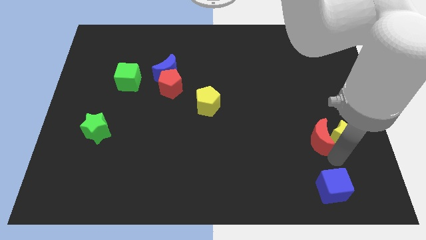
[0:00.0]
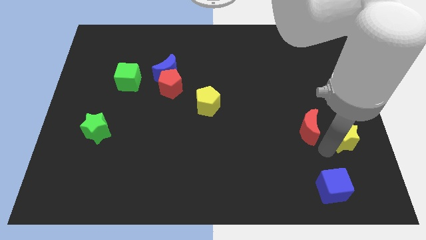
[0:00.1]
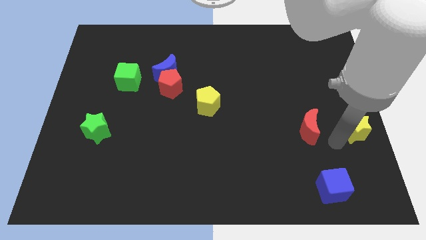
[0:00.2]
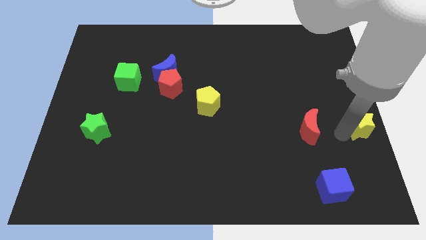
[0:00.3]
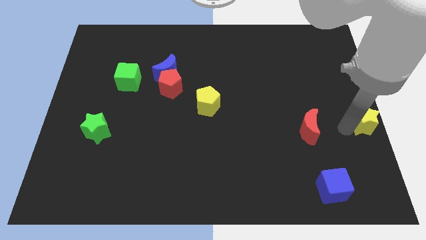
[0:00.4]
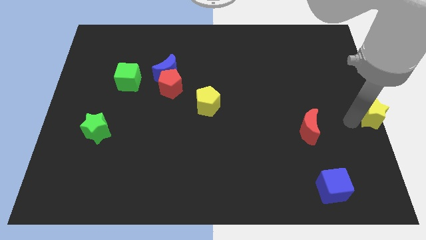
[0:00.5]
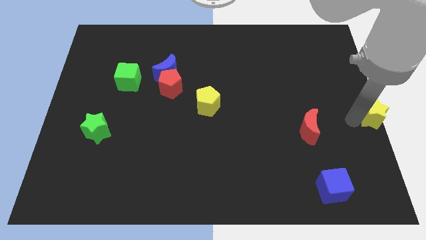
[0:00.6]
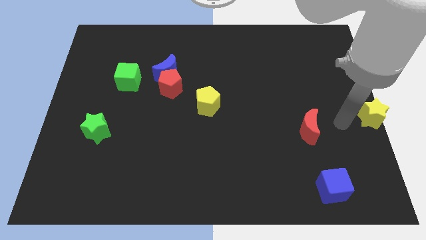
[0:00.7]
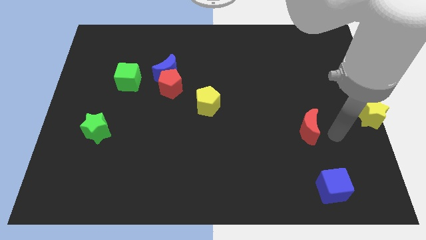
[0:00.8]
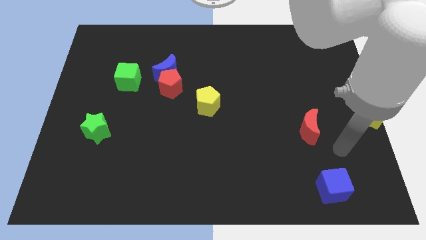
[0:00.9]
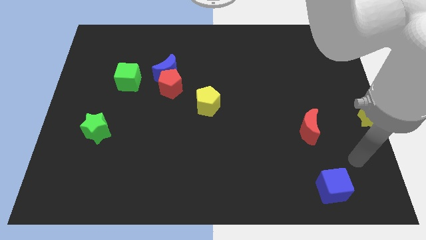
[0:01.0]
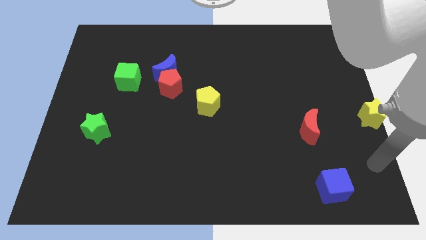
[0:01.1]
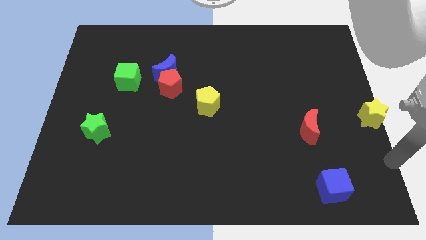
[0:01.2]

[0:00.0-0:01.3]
move the yellow star to the right center of the board

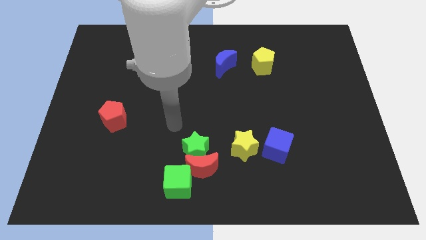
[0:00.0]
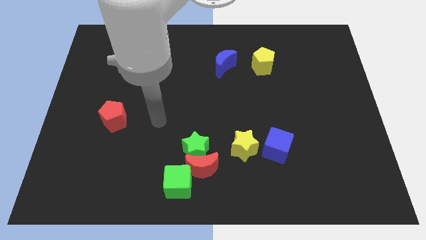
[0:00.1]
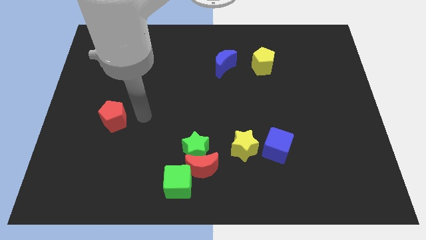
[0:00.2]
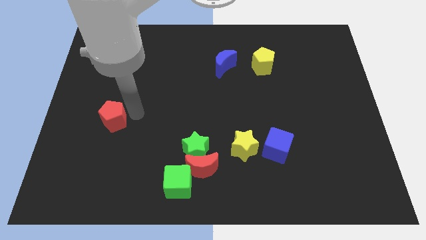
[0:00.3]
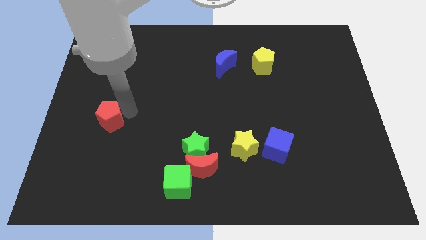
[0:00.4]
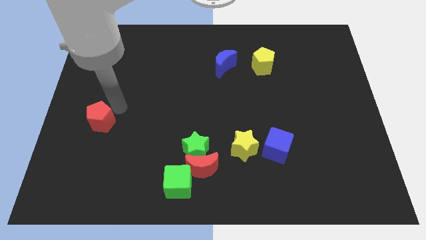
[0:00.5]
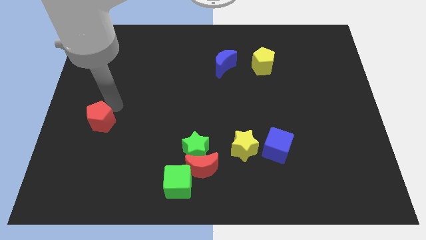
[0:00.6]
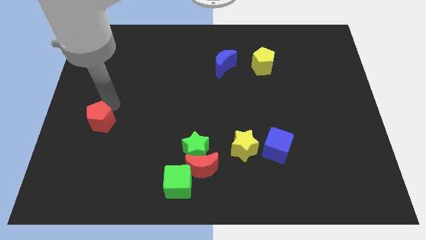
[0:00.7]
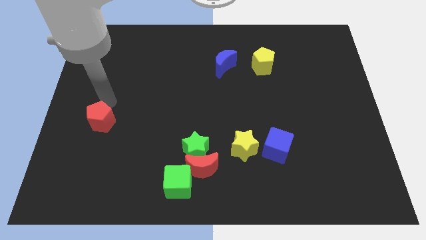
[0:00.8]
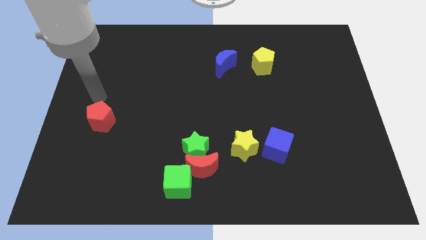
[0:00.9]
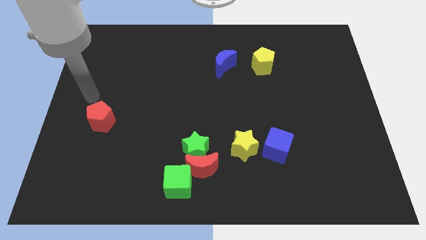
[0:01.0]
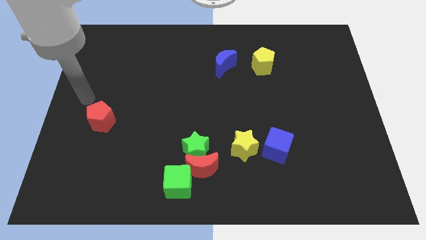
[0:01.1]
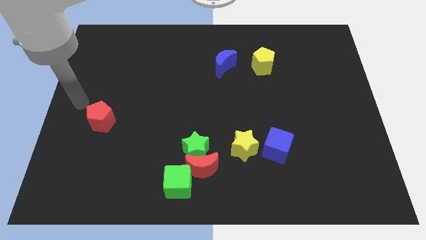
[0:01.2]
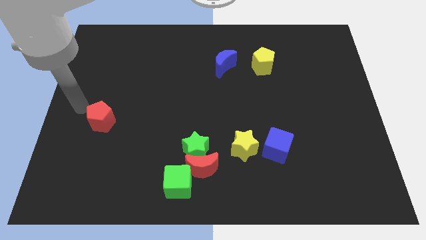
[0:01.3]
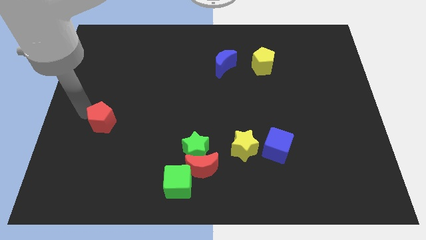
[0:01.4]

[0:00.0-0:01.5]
push the red pentagon slightly towards the left side of the board

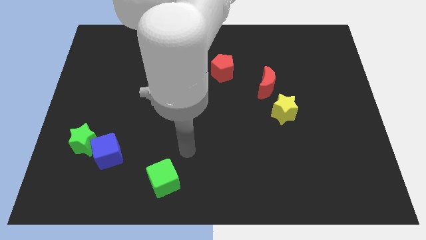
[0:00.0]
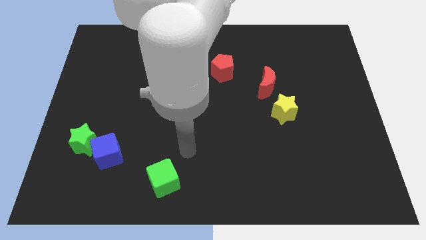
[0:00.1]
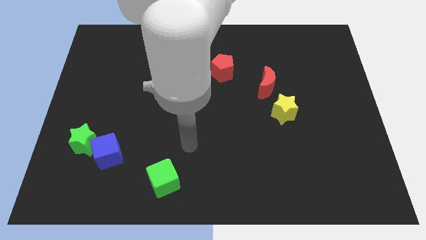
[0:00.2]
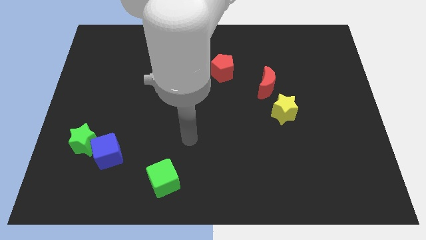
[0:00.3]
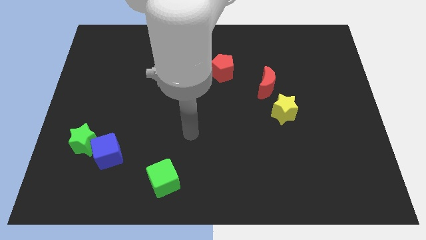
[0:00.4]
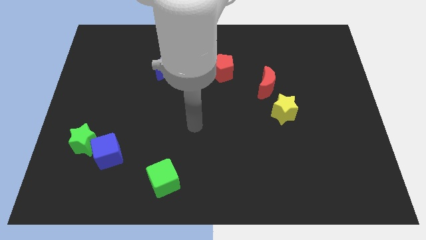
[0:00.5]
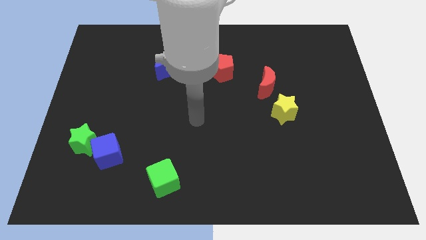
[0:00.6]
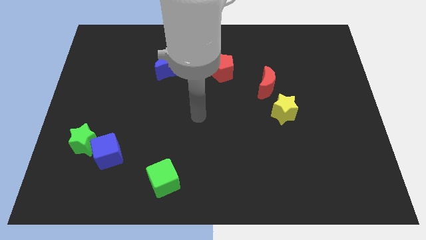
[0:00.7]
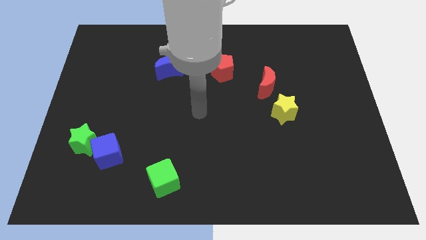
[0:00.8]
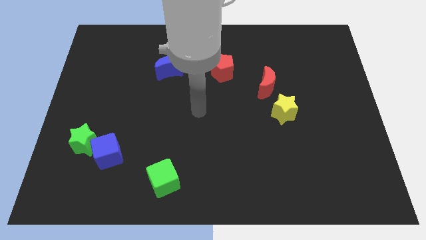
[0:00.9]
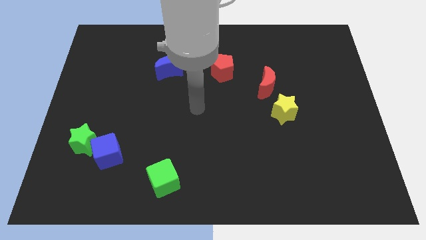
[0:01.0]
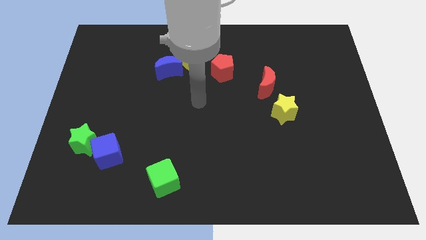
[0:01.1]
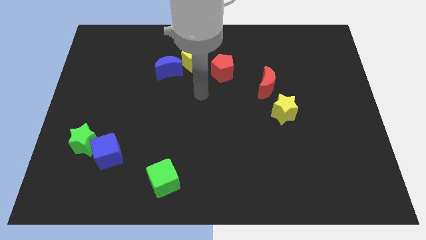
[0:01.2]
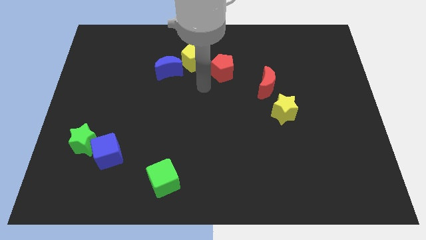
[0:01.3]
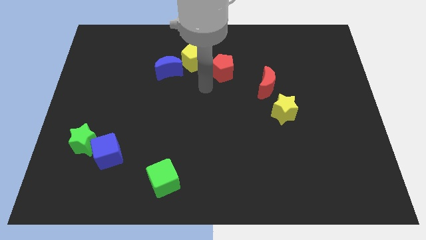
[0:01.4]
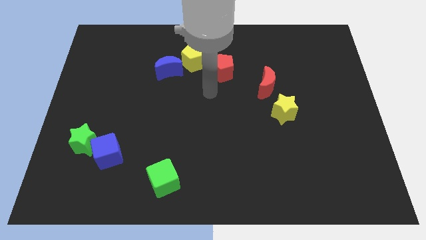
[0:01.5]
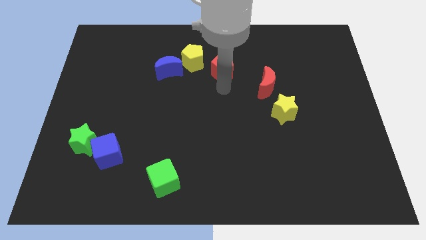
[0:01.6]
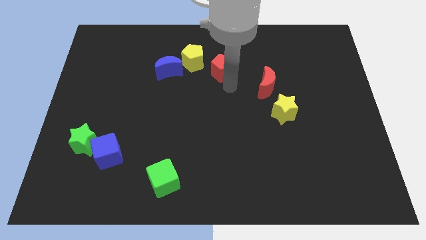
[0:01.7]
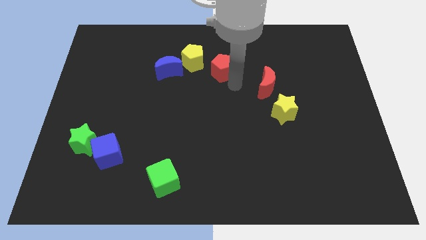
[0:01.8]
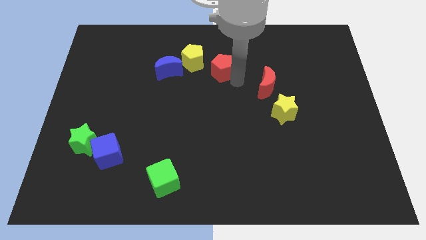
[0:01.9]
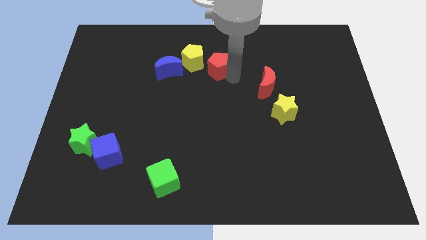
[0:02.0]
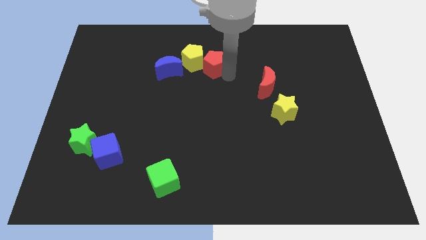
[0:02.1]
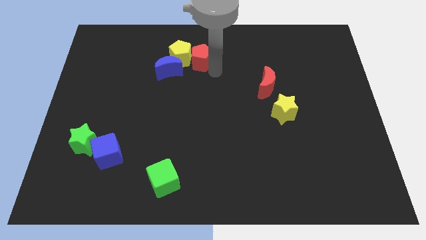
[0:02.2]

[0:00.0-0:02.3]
push the red pentagon into the yellow pentagon

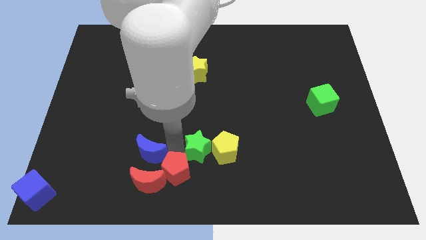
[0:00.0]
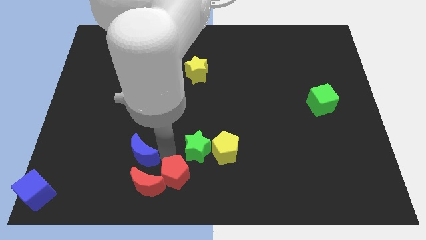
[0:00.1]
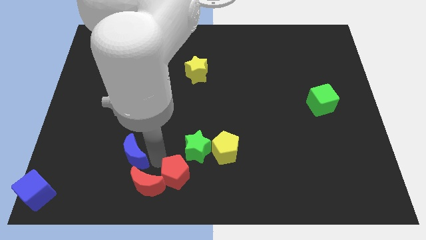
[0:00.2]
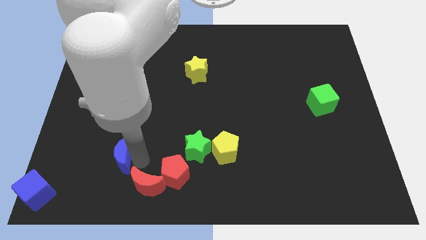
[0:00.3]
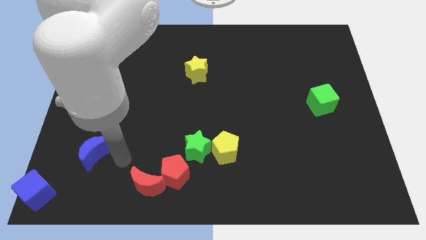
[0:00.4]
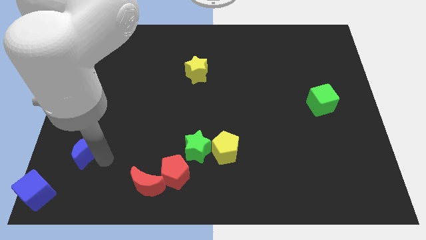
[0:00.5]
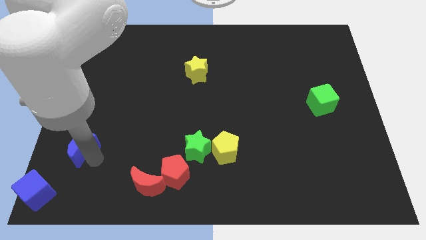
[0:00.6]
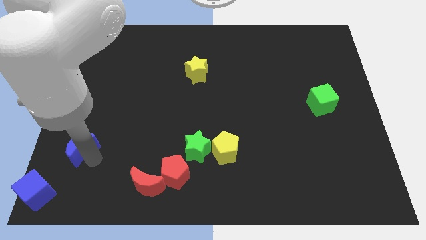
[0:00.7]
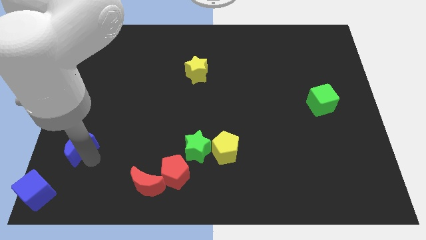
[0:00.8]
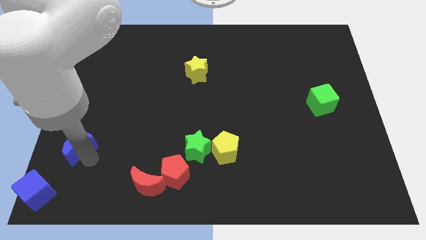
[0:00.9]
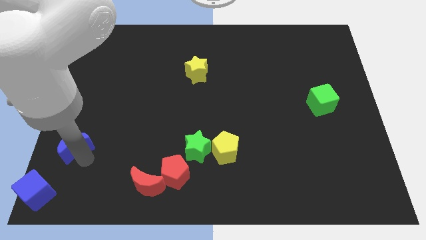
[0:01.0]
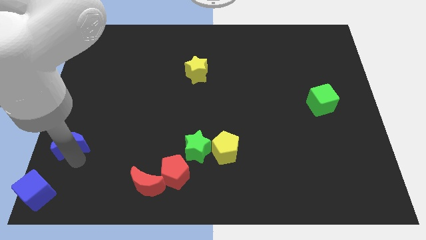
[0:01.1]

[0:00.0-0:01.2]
move the blue moon diagonally top left to the red moon

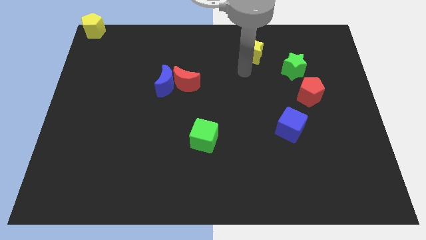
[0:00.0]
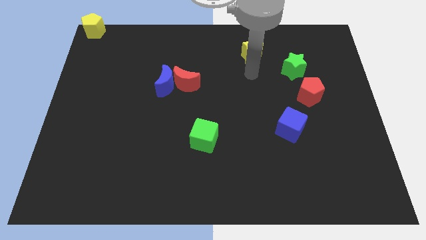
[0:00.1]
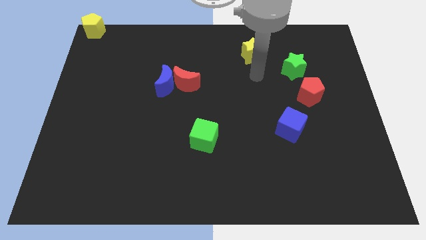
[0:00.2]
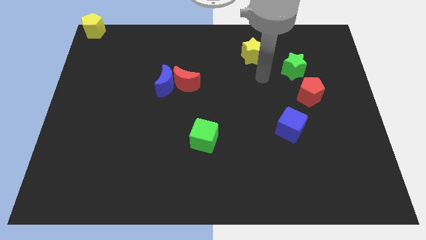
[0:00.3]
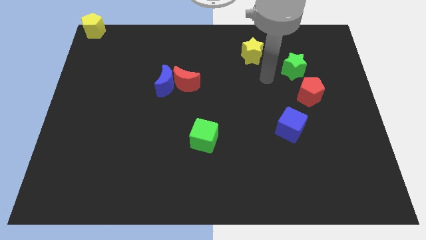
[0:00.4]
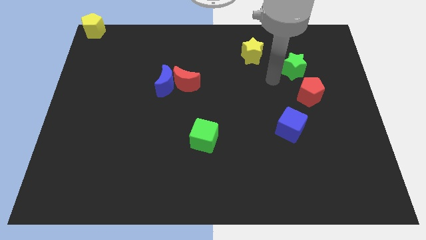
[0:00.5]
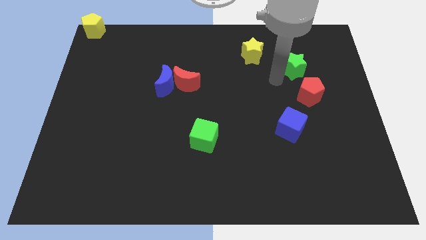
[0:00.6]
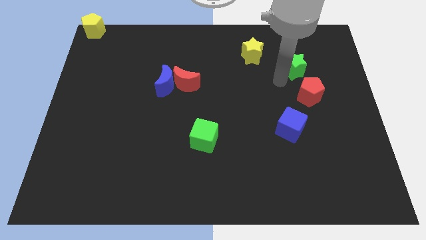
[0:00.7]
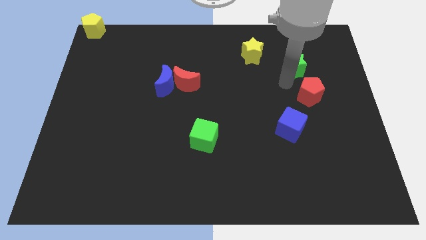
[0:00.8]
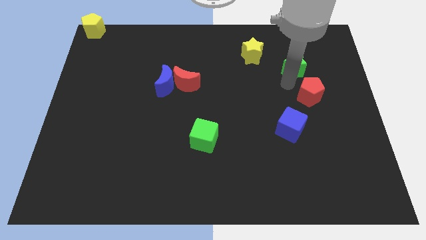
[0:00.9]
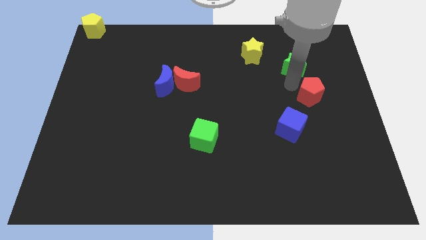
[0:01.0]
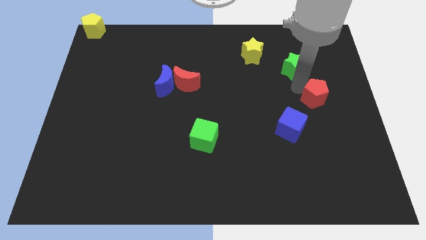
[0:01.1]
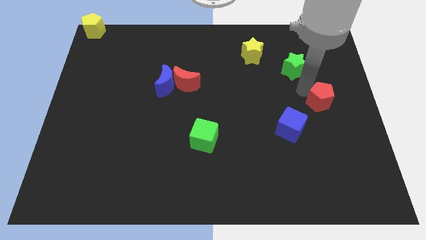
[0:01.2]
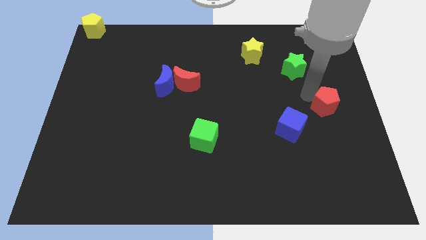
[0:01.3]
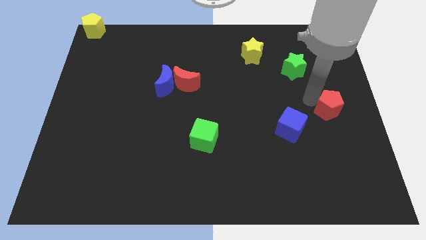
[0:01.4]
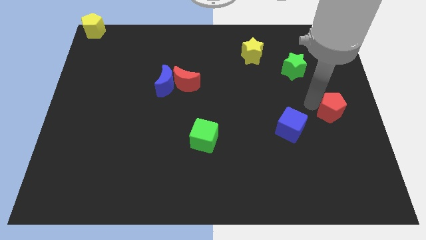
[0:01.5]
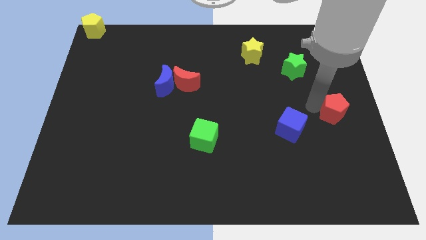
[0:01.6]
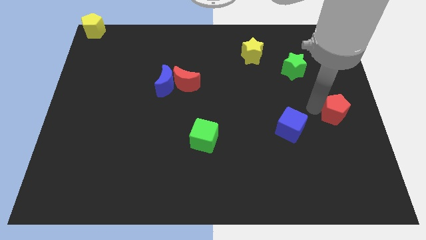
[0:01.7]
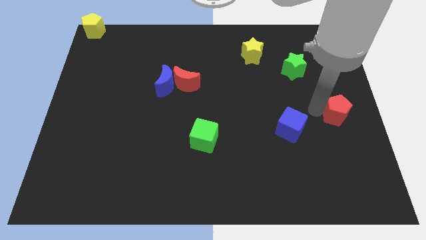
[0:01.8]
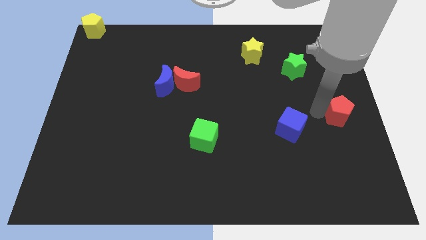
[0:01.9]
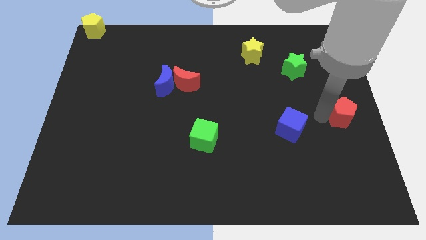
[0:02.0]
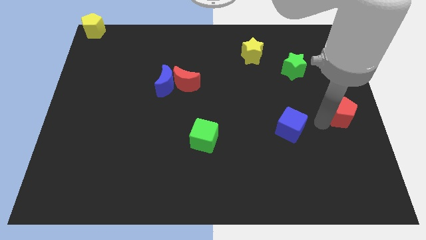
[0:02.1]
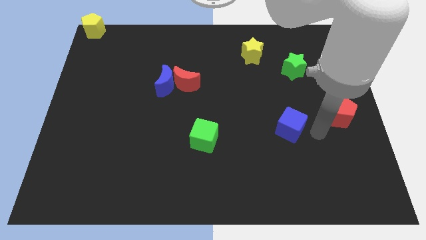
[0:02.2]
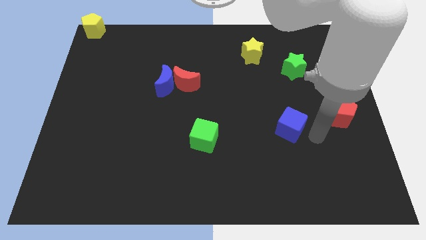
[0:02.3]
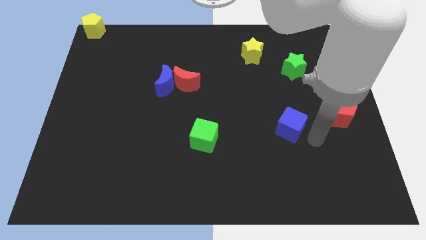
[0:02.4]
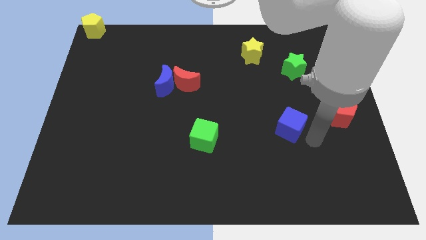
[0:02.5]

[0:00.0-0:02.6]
slightly move down the red pentagon
